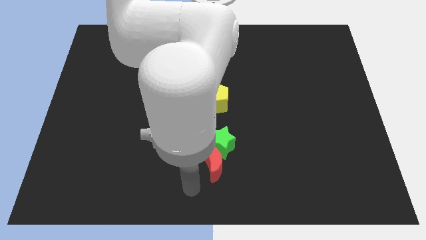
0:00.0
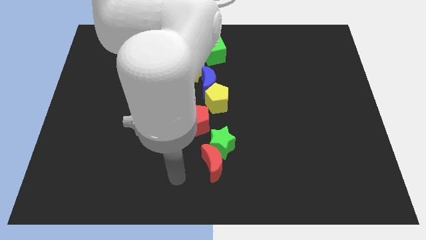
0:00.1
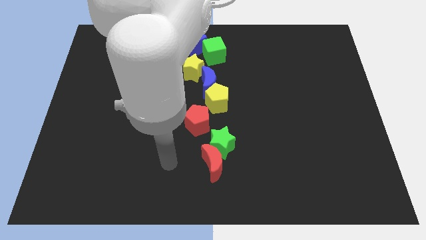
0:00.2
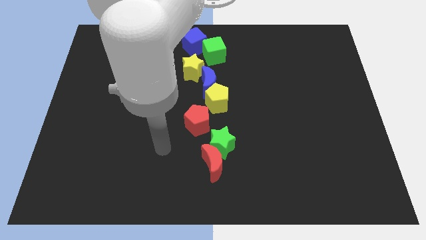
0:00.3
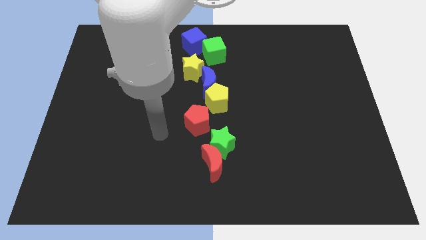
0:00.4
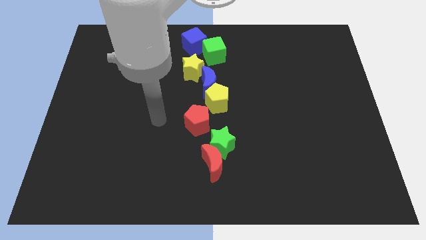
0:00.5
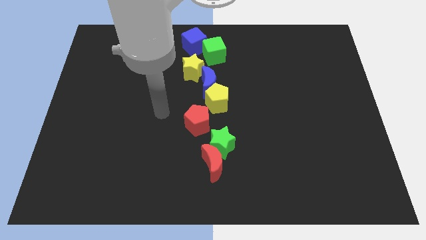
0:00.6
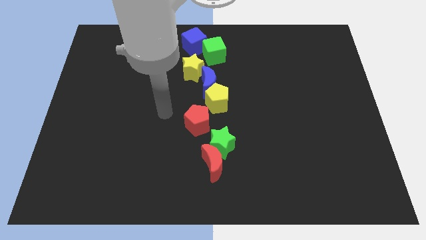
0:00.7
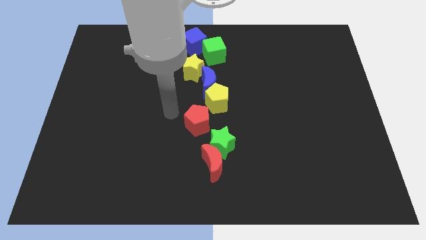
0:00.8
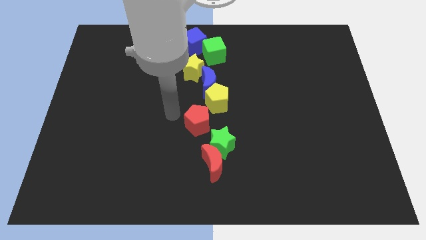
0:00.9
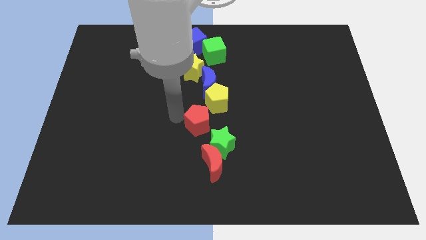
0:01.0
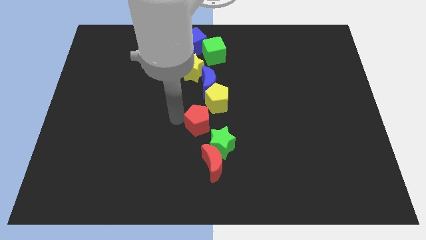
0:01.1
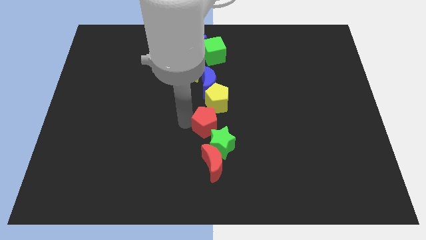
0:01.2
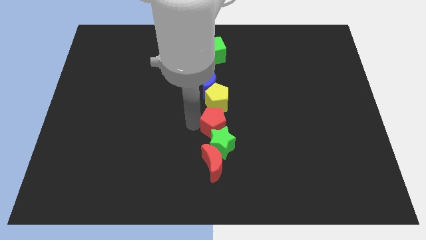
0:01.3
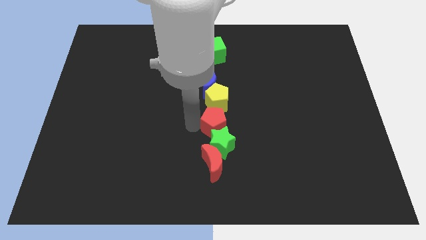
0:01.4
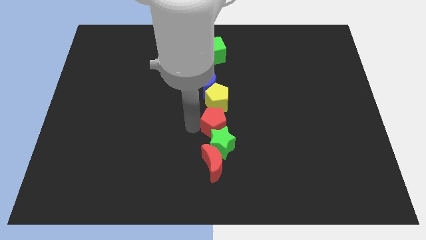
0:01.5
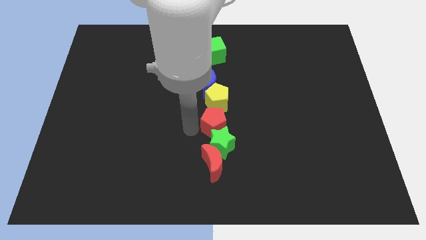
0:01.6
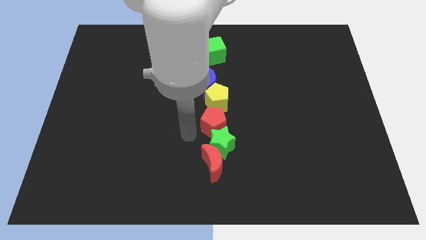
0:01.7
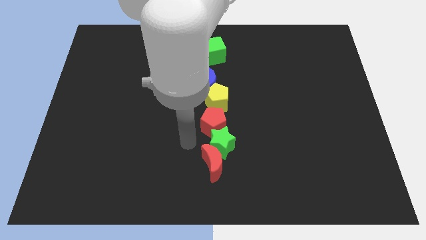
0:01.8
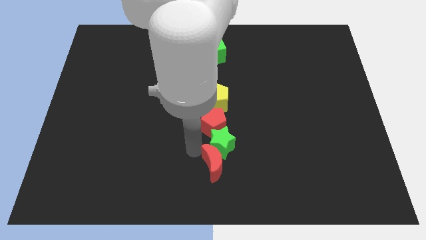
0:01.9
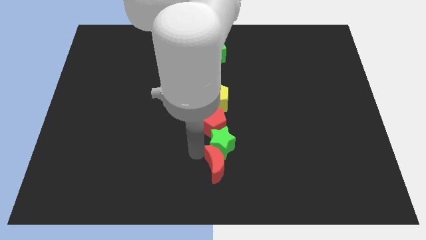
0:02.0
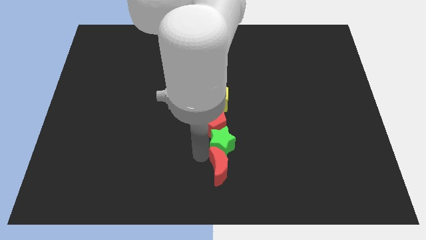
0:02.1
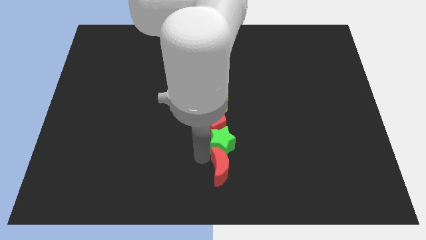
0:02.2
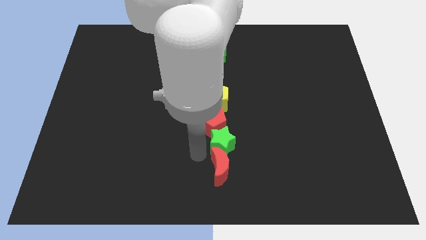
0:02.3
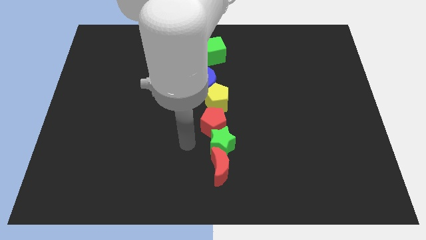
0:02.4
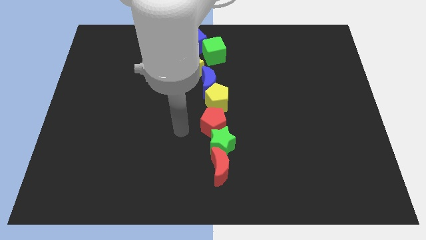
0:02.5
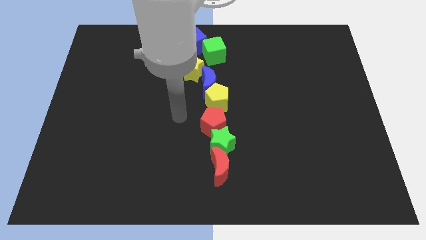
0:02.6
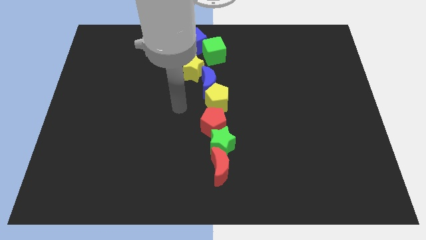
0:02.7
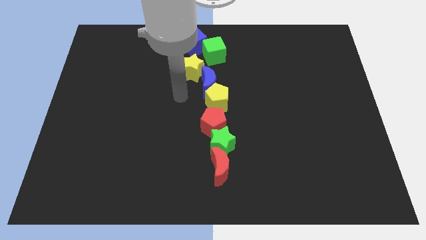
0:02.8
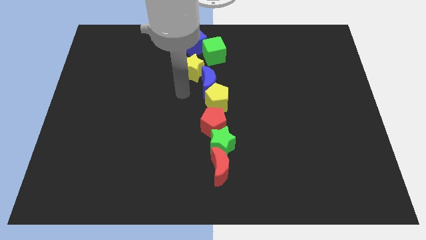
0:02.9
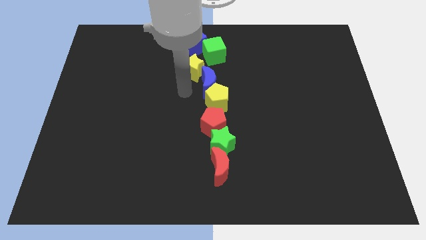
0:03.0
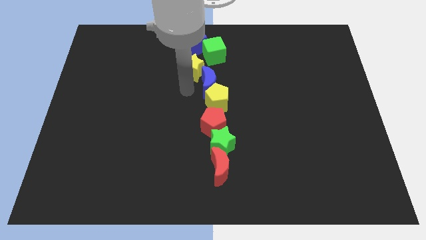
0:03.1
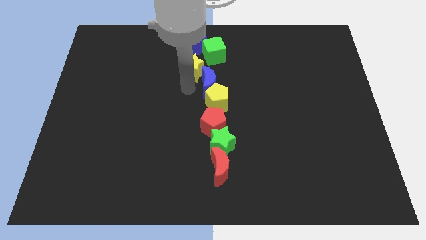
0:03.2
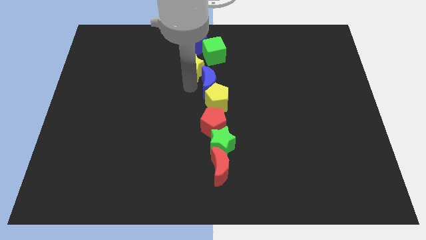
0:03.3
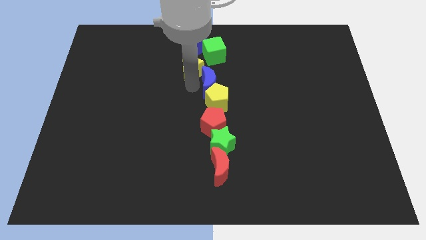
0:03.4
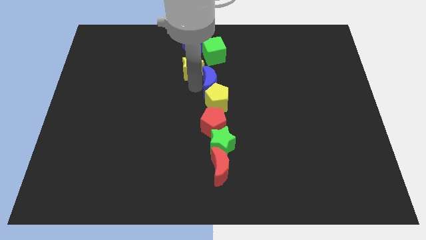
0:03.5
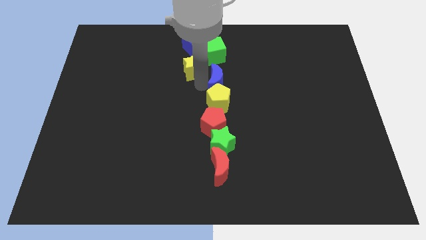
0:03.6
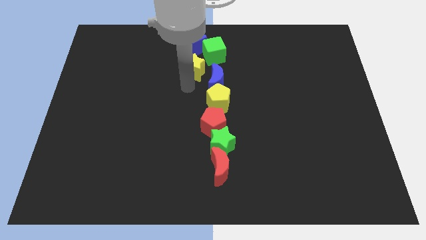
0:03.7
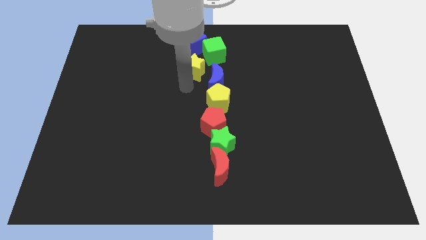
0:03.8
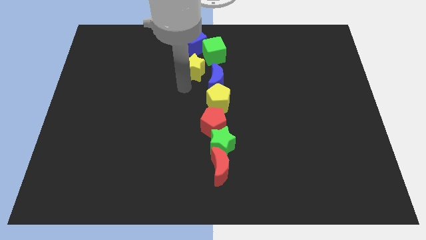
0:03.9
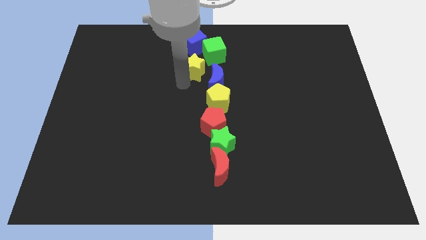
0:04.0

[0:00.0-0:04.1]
move the red pentagon red moon and the blue moon slightly to the right

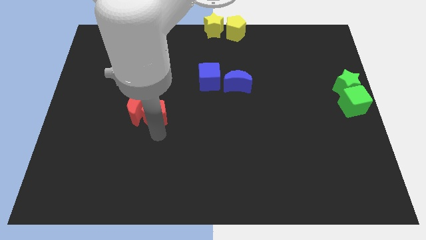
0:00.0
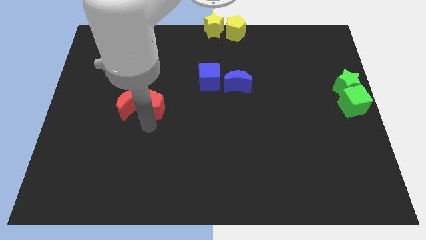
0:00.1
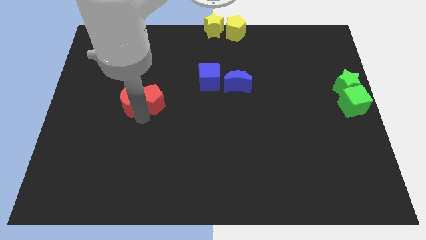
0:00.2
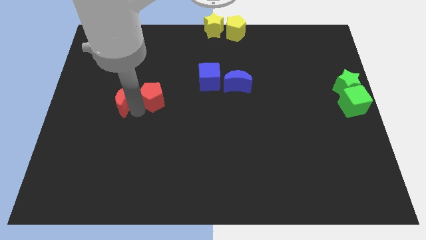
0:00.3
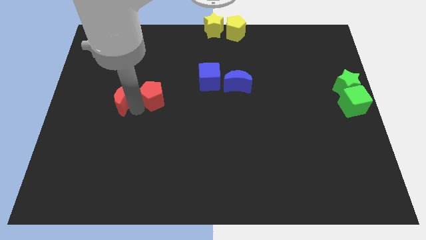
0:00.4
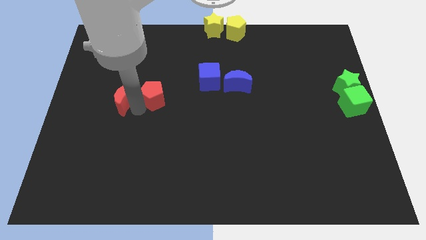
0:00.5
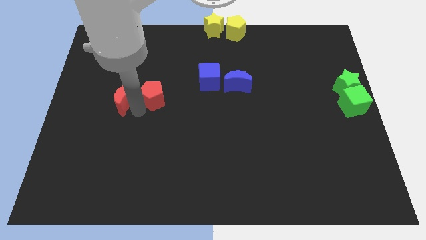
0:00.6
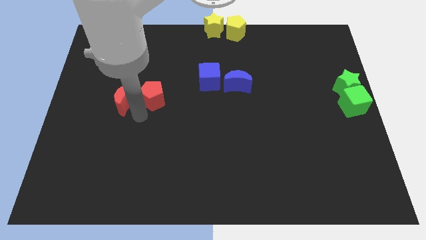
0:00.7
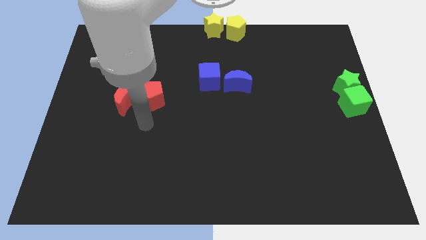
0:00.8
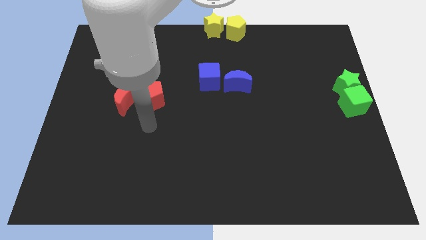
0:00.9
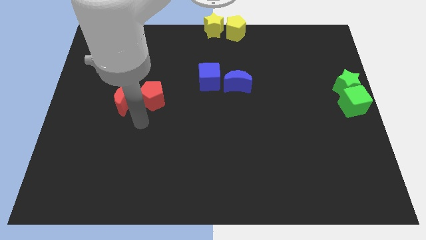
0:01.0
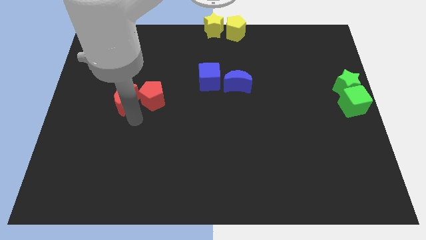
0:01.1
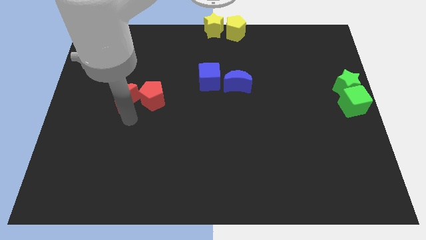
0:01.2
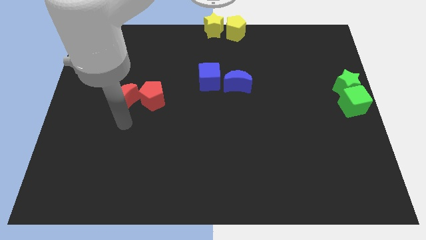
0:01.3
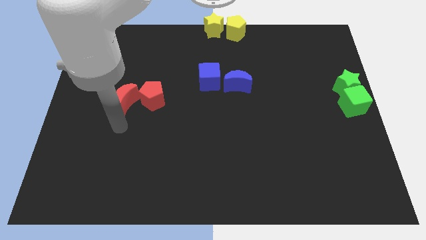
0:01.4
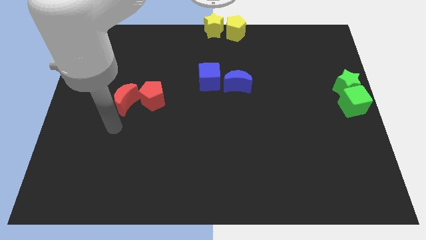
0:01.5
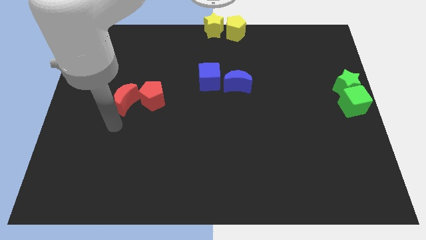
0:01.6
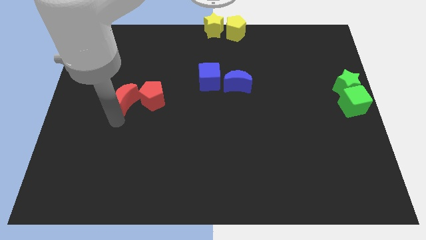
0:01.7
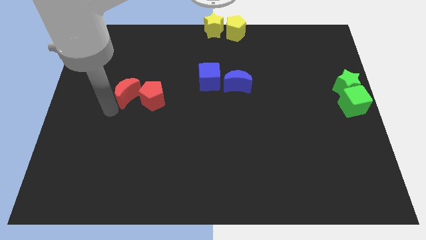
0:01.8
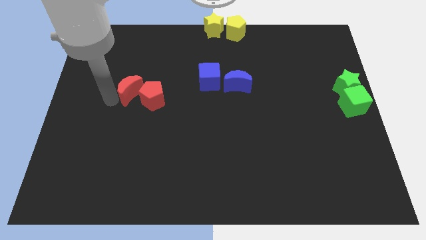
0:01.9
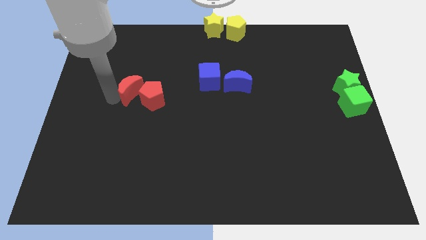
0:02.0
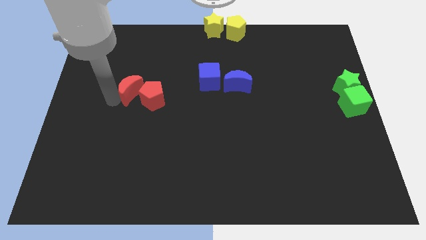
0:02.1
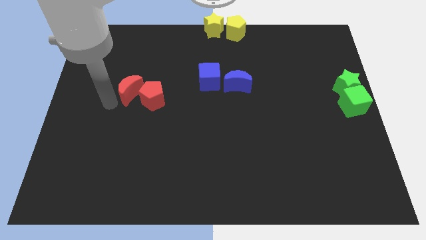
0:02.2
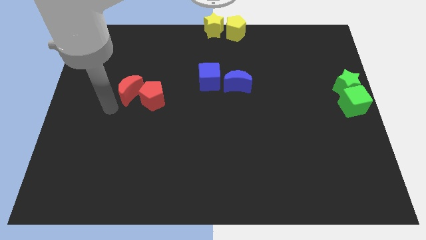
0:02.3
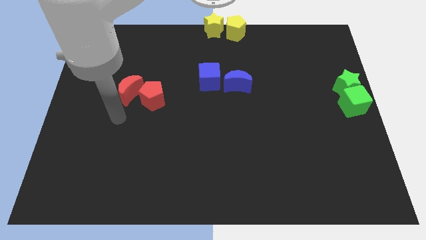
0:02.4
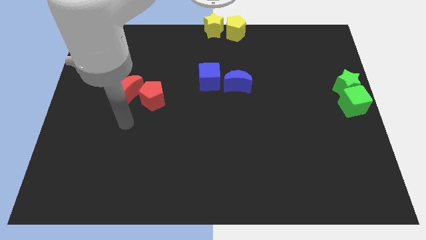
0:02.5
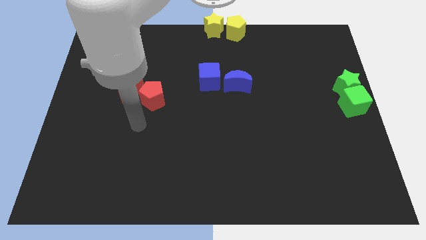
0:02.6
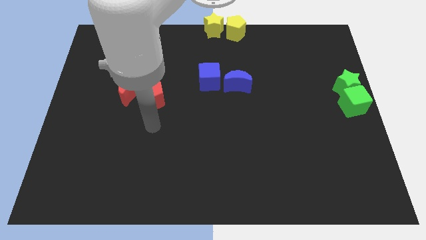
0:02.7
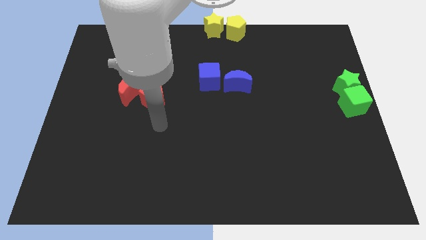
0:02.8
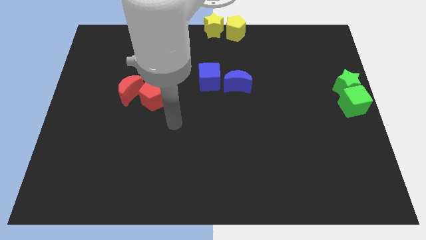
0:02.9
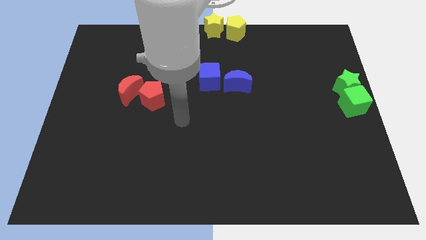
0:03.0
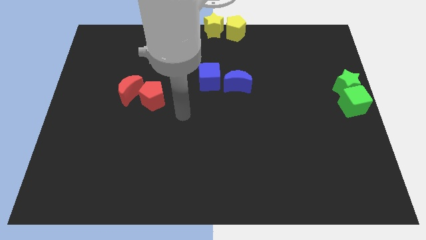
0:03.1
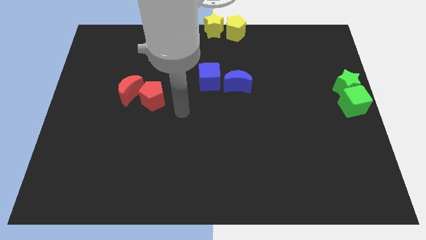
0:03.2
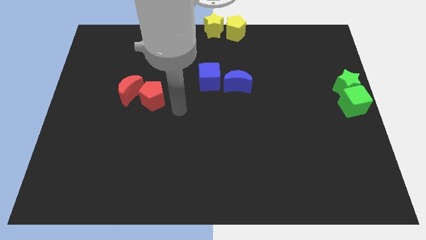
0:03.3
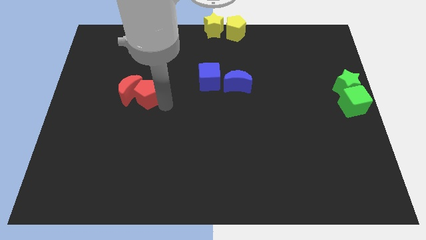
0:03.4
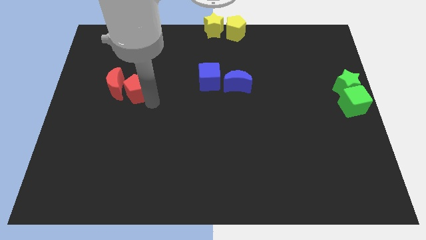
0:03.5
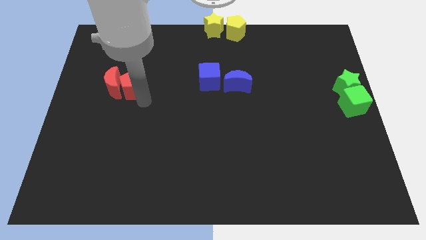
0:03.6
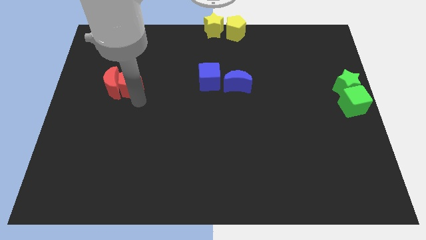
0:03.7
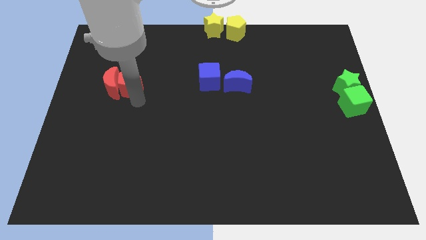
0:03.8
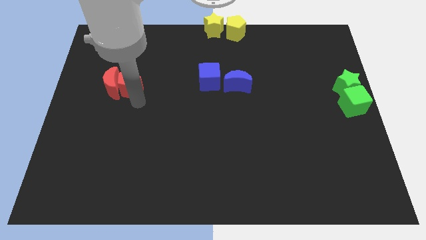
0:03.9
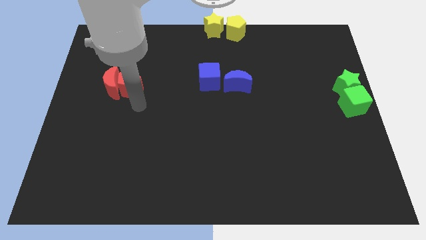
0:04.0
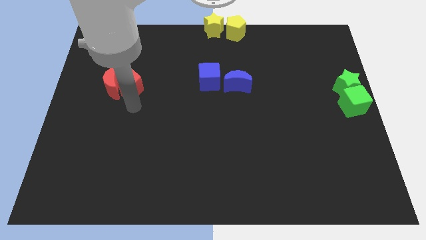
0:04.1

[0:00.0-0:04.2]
push the red pentagon along with red crescent parallel left to the blue cube

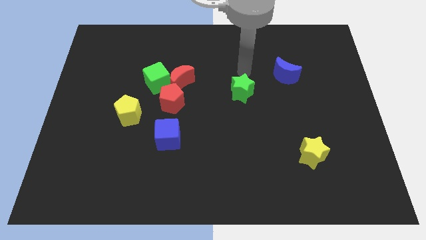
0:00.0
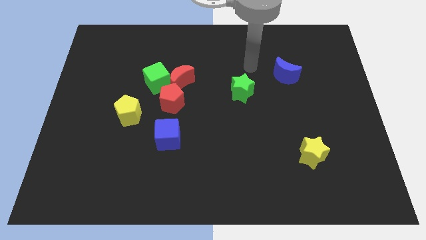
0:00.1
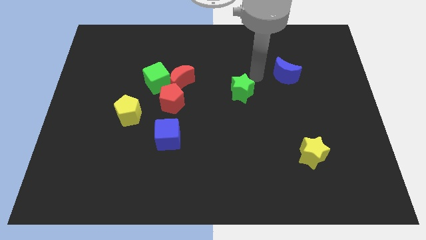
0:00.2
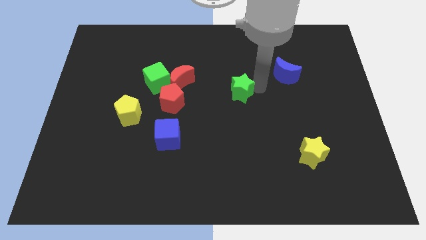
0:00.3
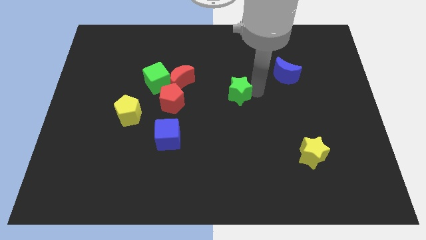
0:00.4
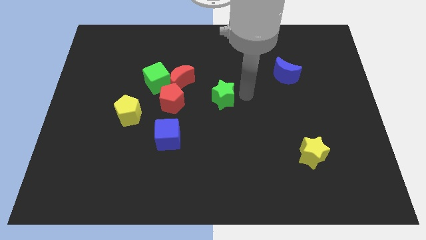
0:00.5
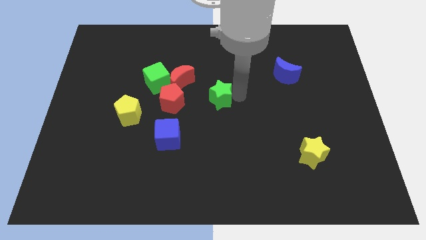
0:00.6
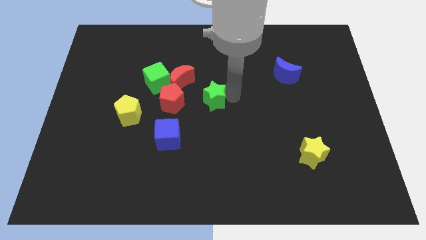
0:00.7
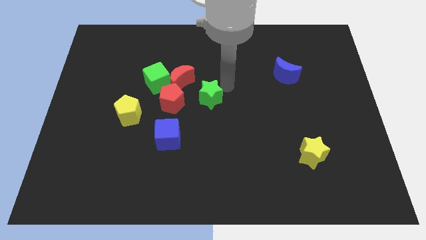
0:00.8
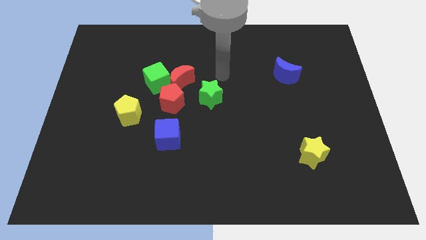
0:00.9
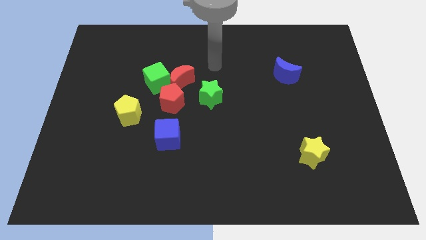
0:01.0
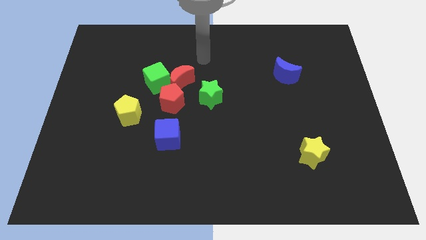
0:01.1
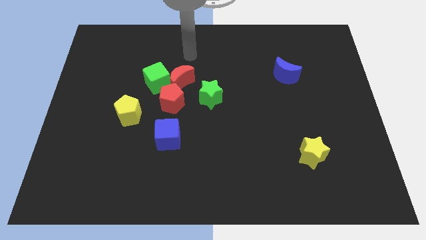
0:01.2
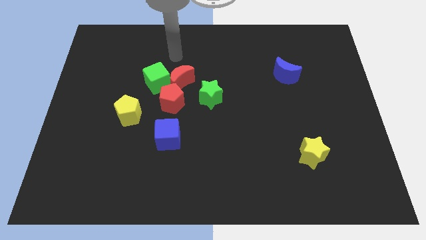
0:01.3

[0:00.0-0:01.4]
push the green star towards the center of the board
